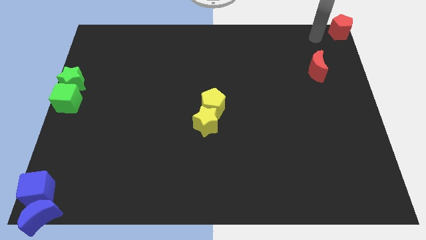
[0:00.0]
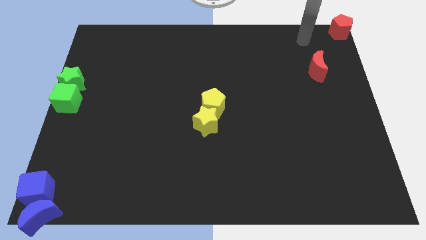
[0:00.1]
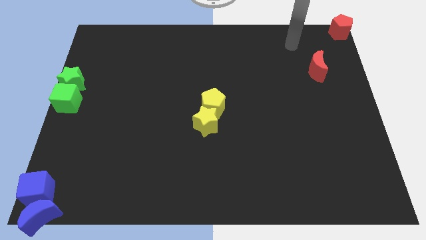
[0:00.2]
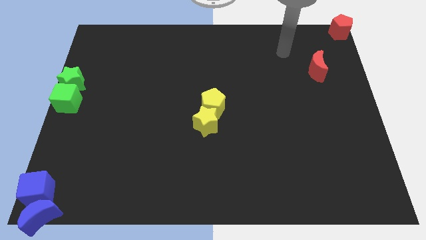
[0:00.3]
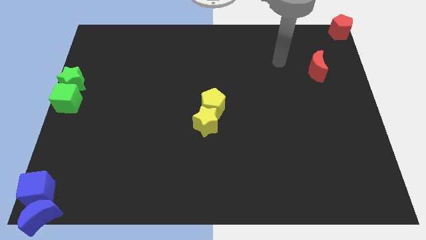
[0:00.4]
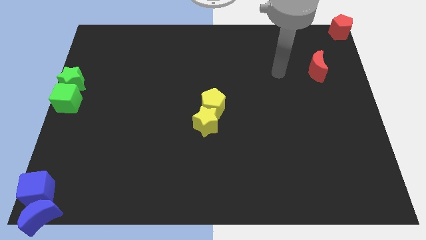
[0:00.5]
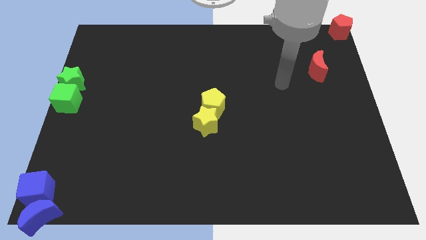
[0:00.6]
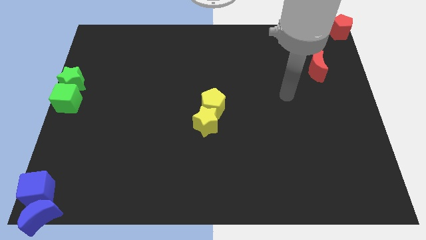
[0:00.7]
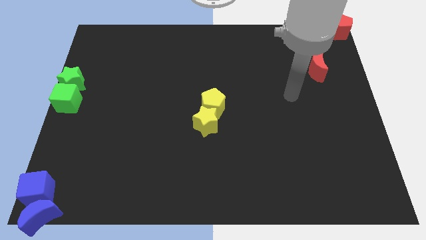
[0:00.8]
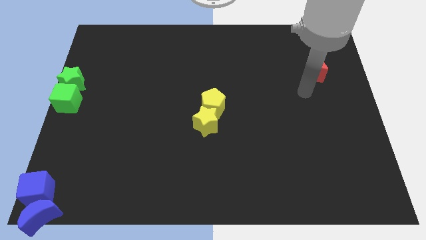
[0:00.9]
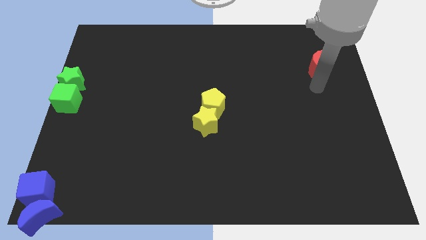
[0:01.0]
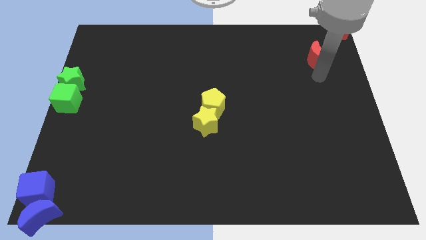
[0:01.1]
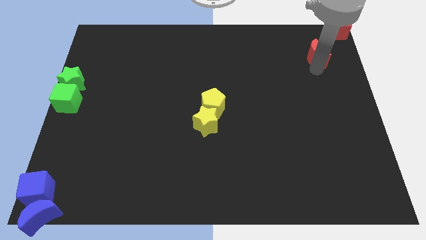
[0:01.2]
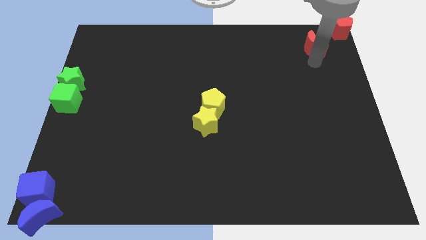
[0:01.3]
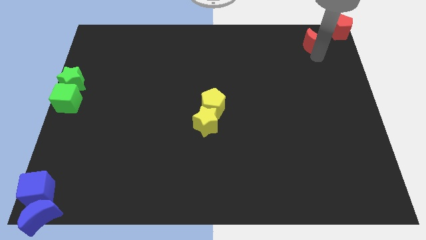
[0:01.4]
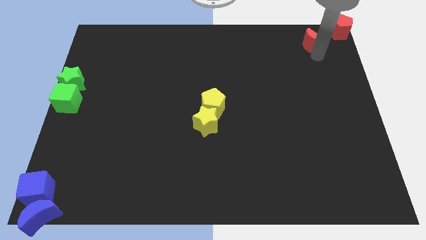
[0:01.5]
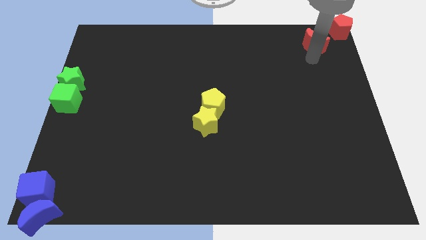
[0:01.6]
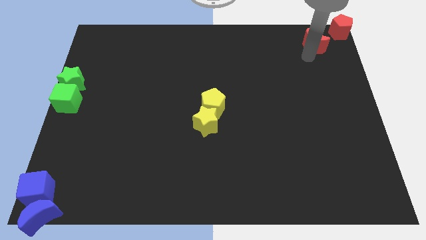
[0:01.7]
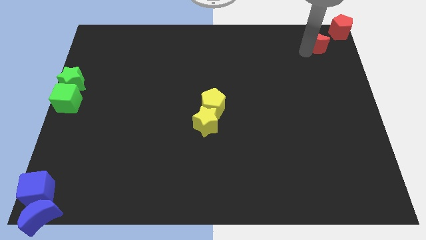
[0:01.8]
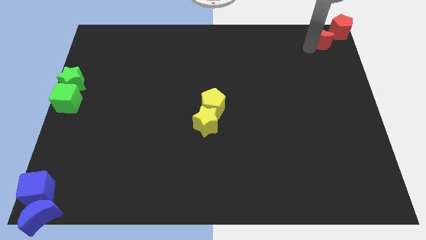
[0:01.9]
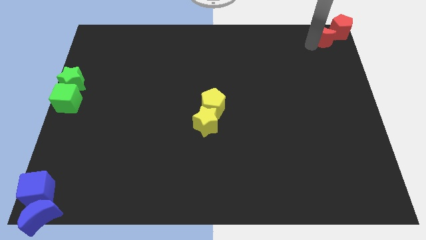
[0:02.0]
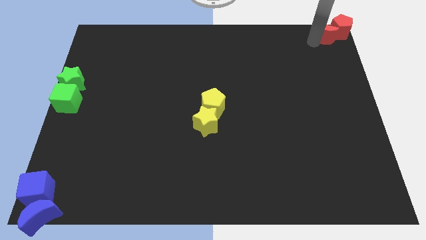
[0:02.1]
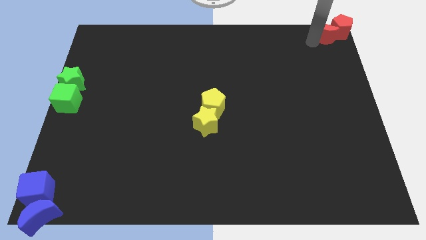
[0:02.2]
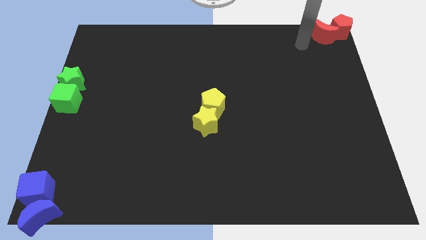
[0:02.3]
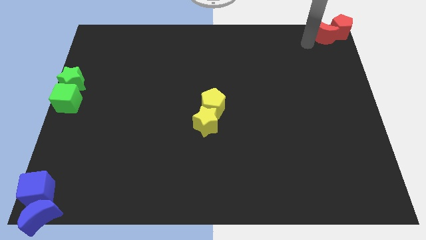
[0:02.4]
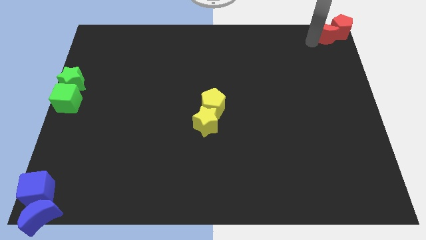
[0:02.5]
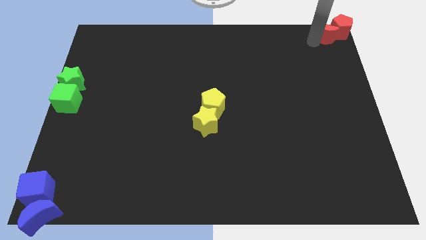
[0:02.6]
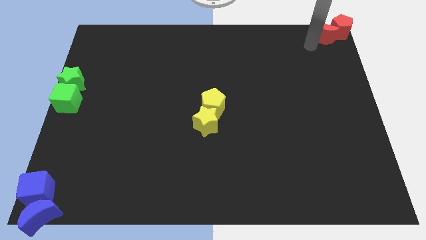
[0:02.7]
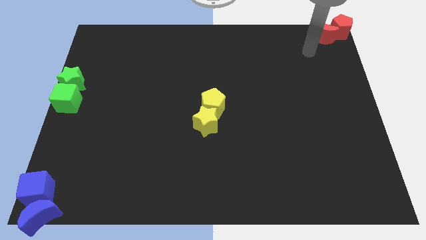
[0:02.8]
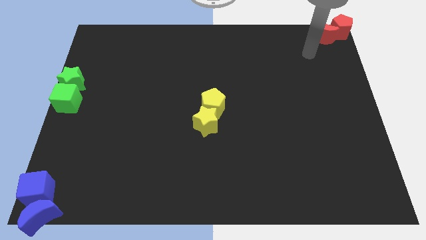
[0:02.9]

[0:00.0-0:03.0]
move red moon into red pentagon

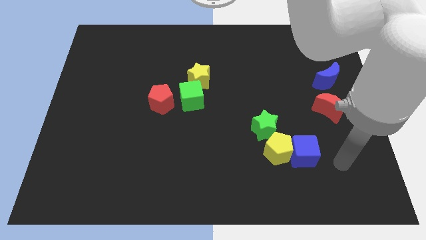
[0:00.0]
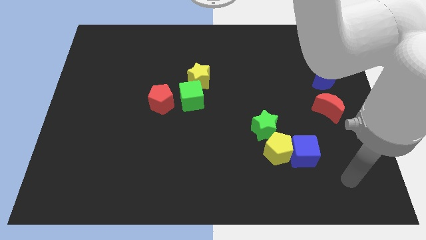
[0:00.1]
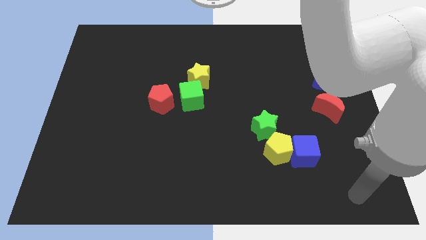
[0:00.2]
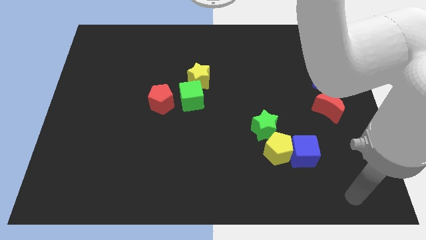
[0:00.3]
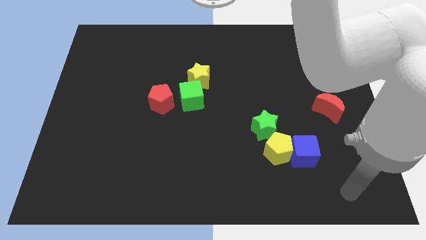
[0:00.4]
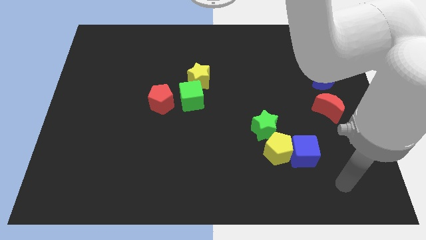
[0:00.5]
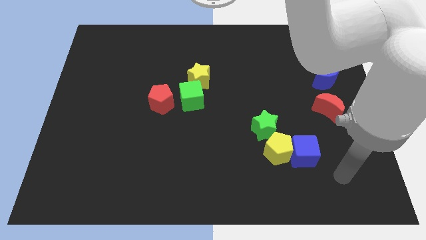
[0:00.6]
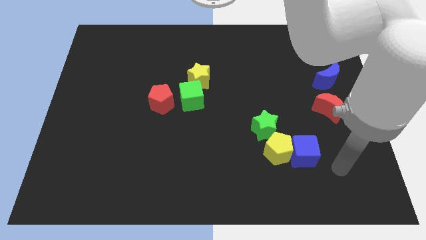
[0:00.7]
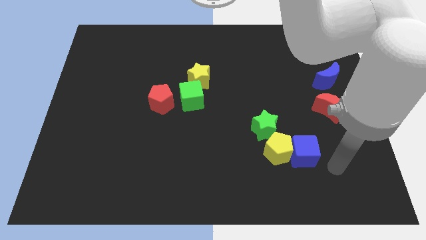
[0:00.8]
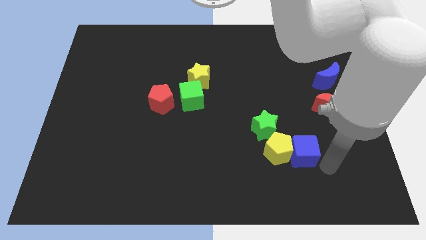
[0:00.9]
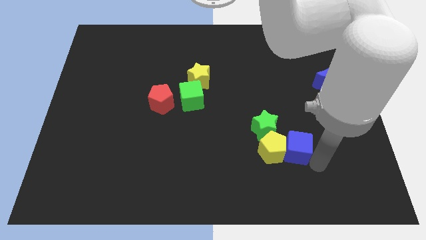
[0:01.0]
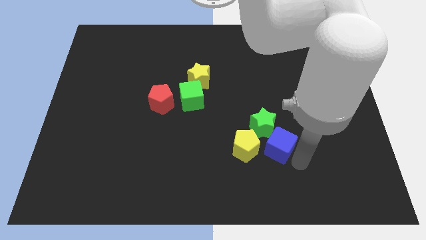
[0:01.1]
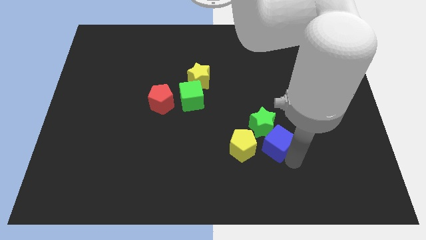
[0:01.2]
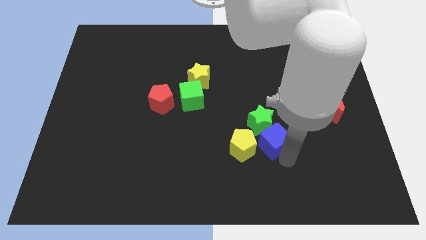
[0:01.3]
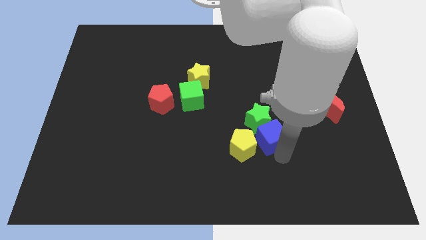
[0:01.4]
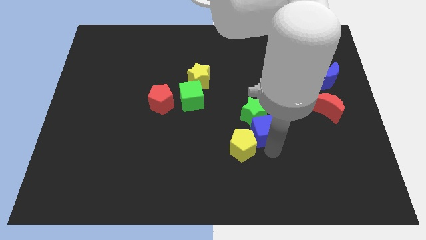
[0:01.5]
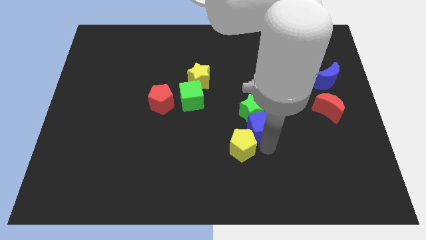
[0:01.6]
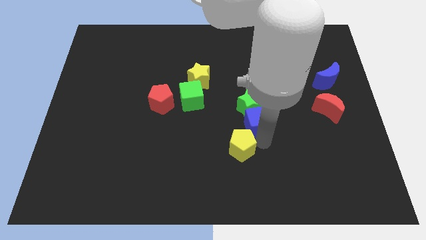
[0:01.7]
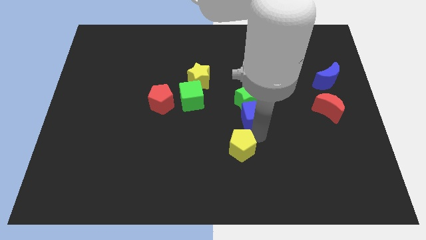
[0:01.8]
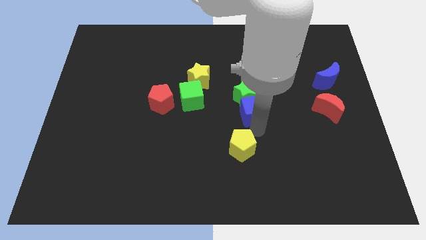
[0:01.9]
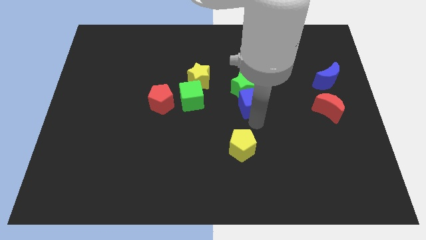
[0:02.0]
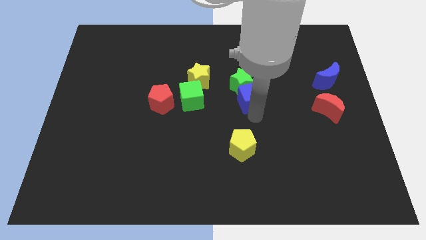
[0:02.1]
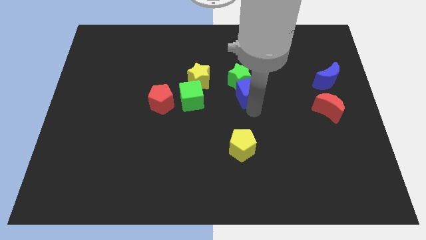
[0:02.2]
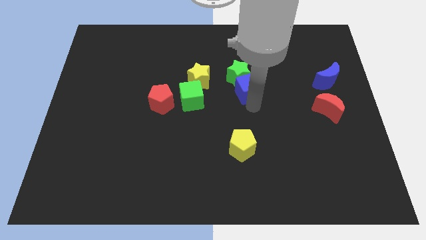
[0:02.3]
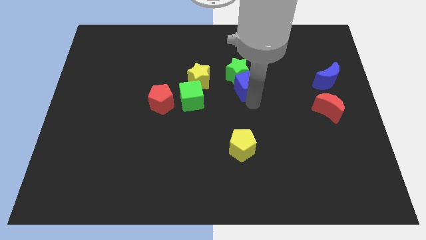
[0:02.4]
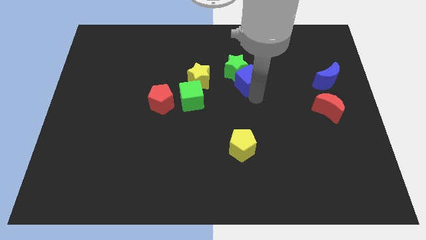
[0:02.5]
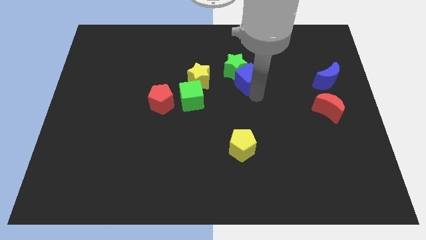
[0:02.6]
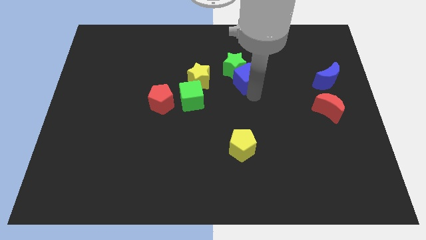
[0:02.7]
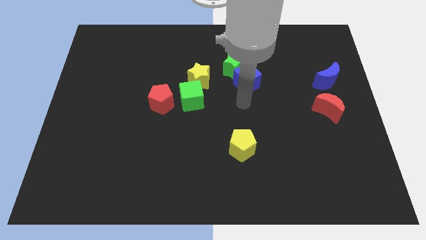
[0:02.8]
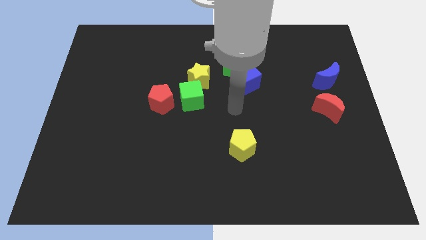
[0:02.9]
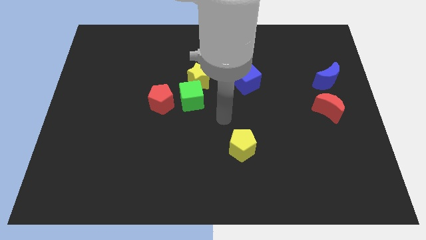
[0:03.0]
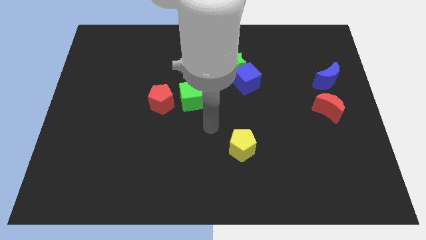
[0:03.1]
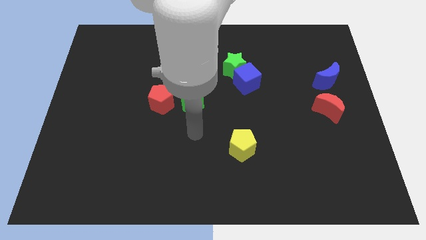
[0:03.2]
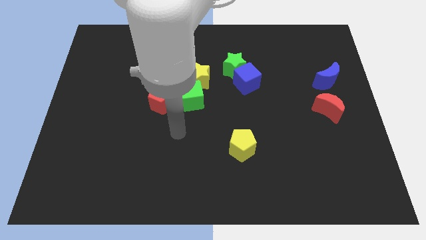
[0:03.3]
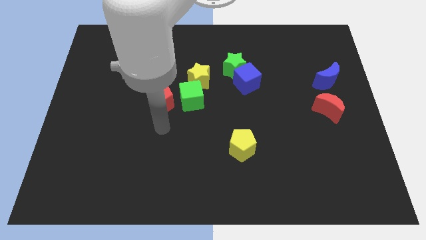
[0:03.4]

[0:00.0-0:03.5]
separate the blue cube and green star from the yellow pentagon

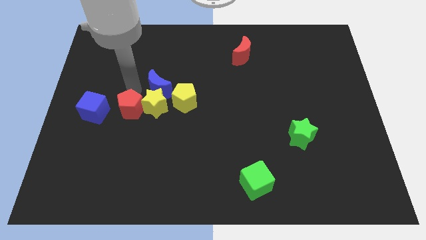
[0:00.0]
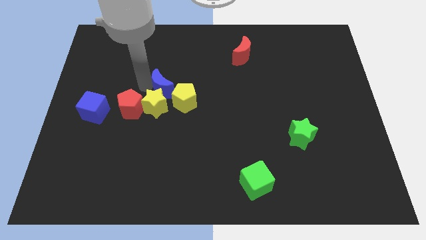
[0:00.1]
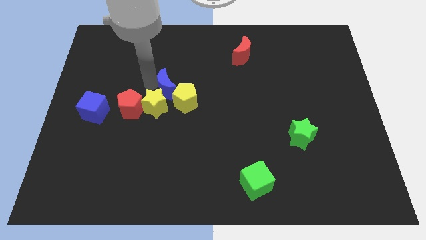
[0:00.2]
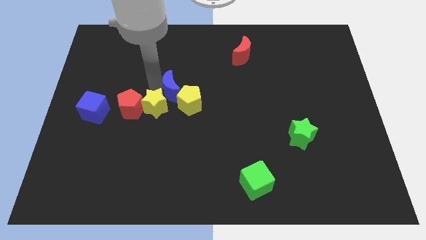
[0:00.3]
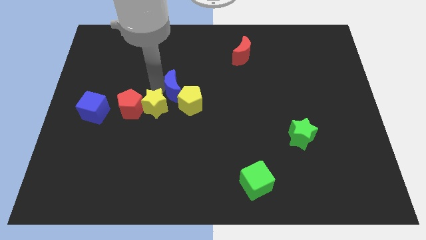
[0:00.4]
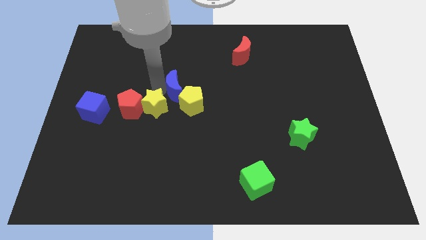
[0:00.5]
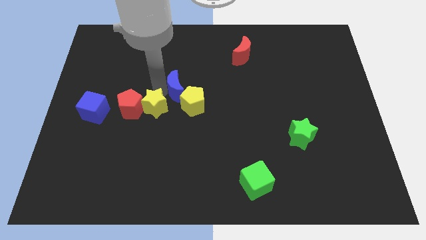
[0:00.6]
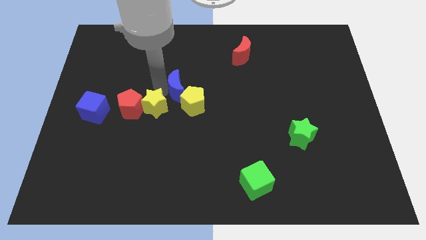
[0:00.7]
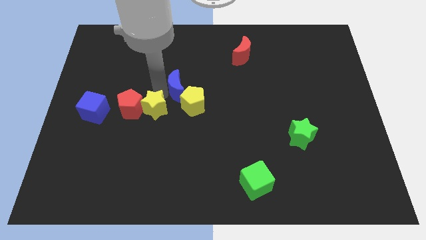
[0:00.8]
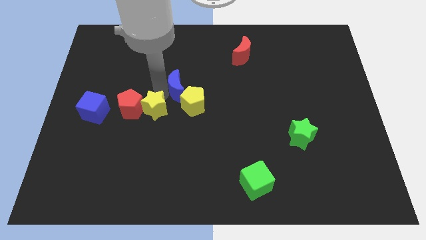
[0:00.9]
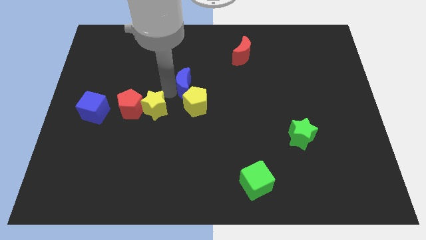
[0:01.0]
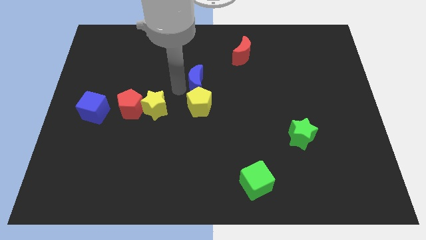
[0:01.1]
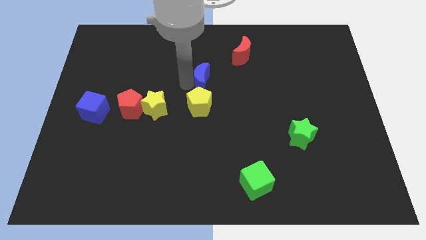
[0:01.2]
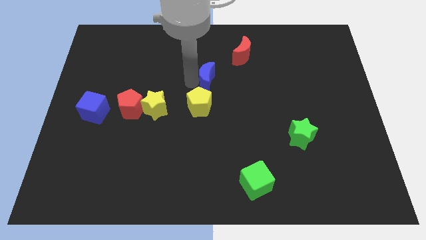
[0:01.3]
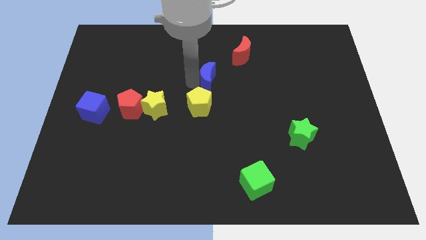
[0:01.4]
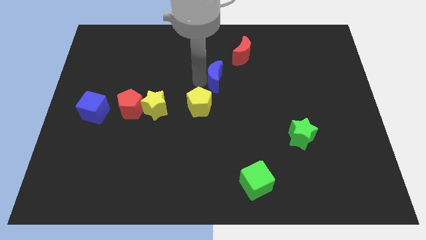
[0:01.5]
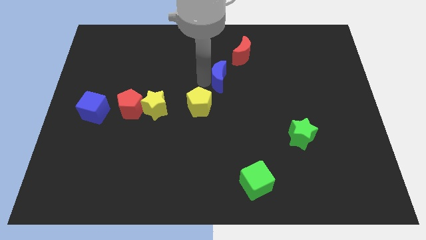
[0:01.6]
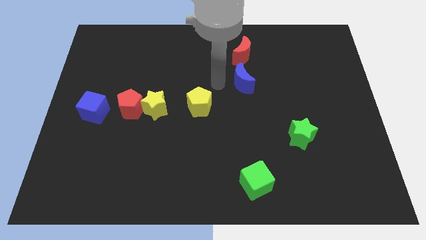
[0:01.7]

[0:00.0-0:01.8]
put the blue crescent underneath the red moon

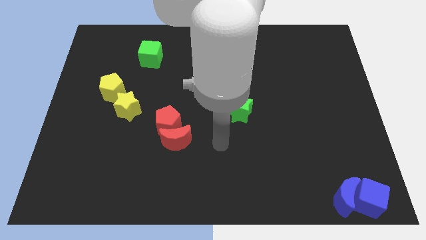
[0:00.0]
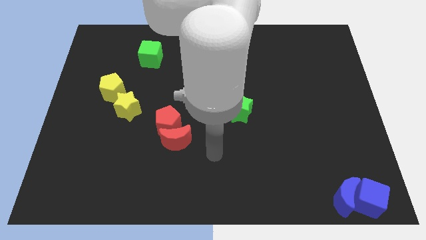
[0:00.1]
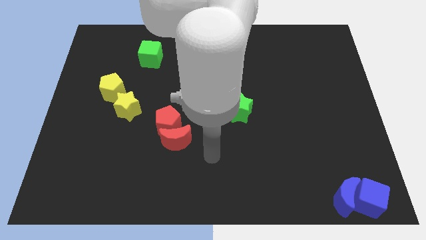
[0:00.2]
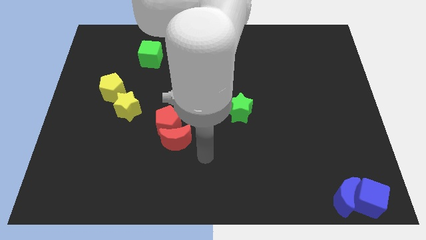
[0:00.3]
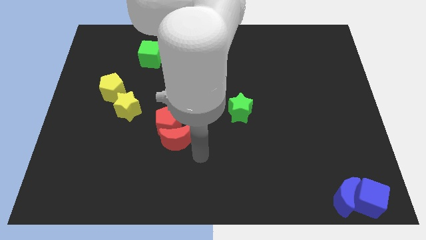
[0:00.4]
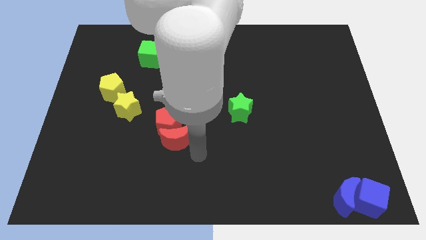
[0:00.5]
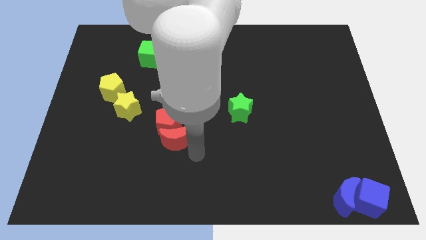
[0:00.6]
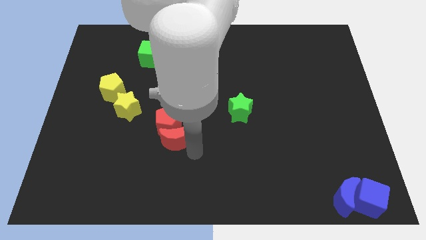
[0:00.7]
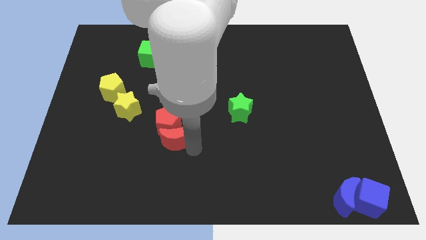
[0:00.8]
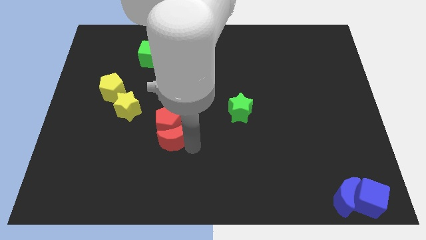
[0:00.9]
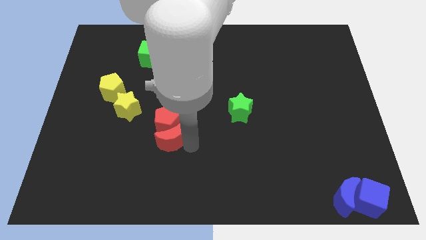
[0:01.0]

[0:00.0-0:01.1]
touch the bottom of red crescent
